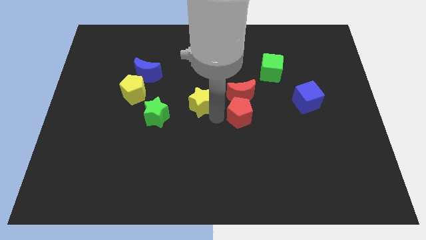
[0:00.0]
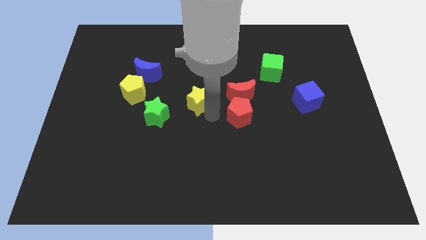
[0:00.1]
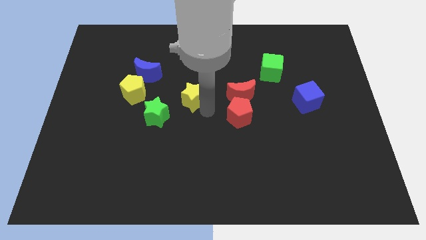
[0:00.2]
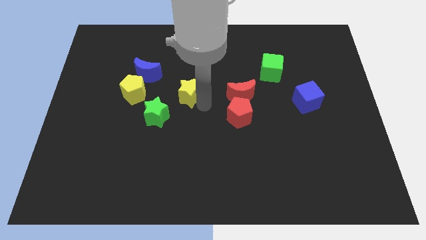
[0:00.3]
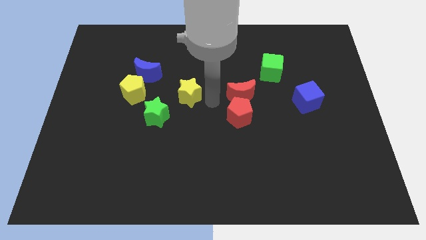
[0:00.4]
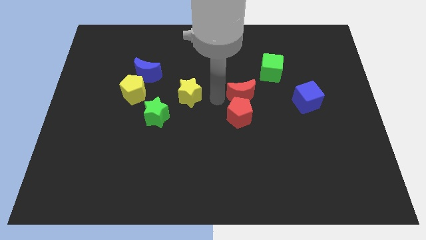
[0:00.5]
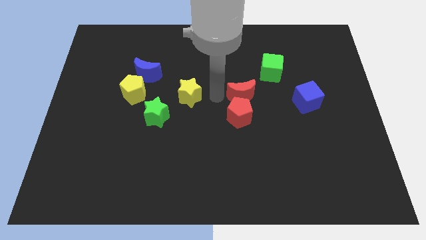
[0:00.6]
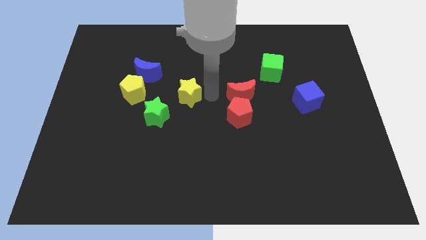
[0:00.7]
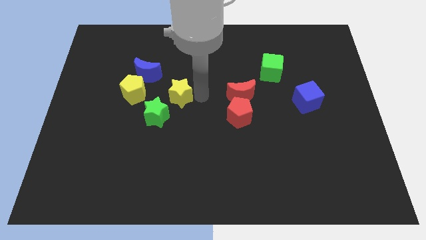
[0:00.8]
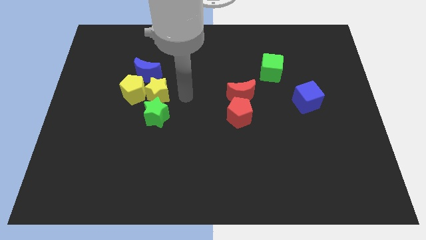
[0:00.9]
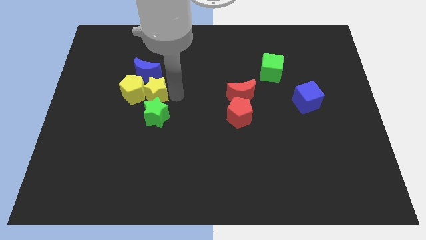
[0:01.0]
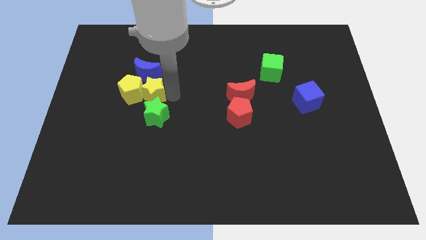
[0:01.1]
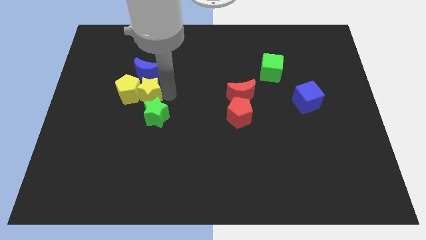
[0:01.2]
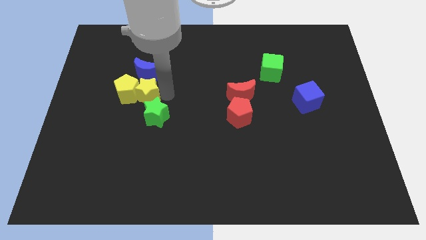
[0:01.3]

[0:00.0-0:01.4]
drag the yellow star into the right side of the yellow pentagon

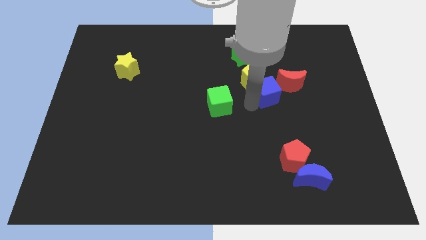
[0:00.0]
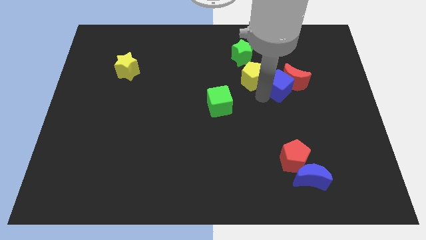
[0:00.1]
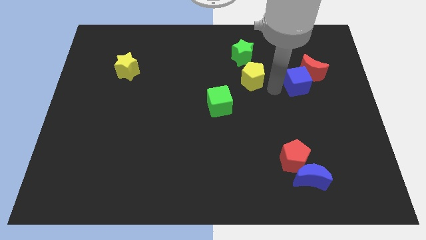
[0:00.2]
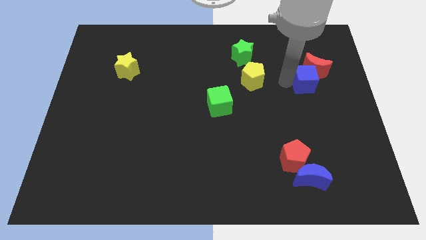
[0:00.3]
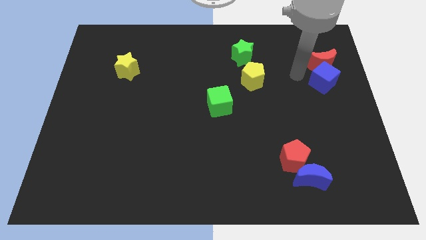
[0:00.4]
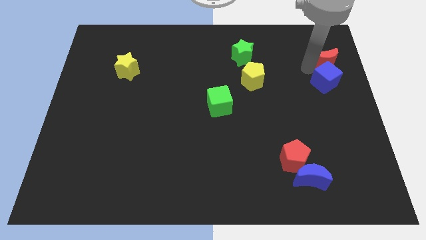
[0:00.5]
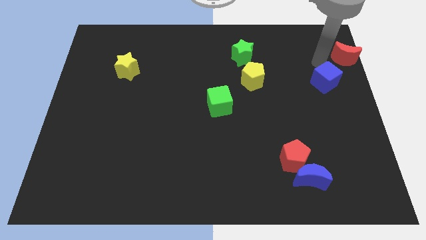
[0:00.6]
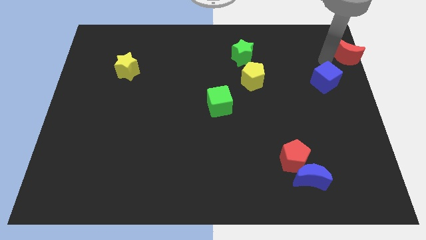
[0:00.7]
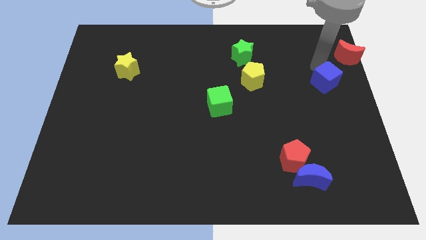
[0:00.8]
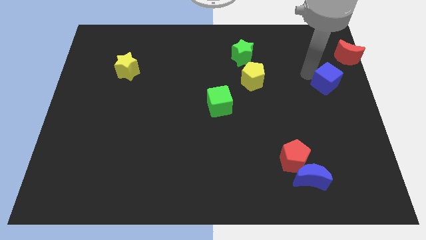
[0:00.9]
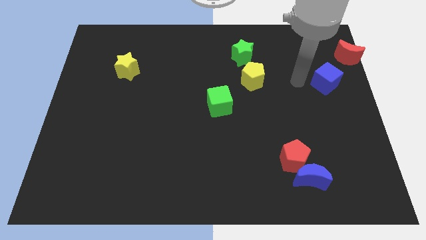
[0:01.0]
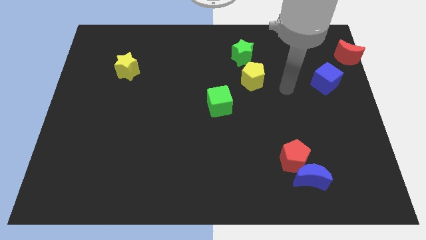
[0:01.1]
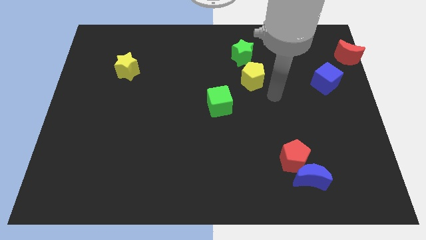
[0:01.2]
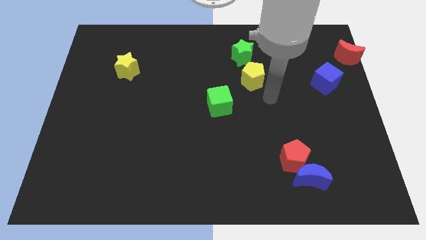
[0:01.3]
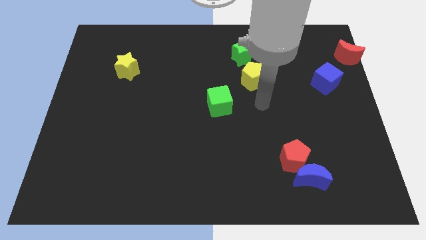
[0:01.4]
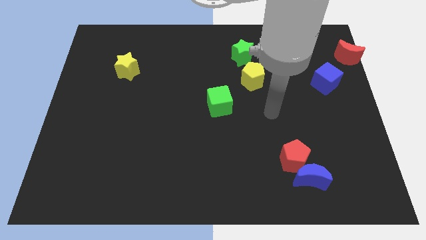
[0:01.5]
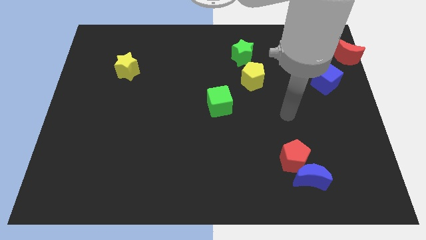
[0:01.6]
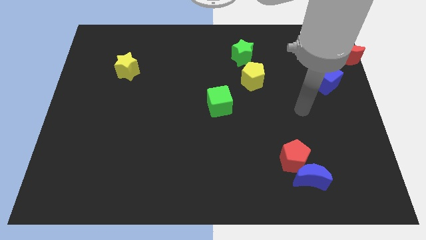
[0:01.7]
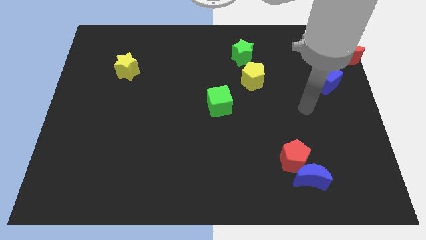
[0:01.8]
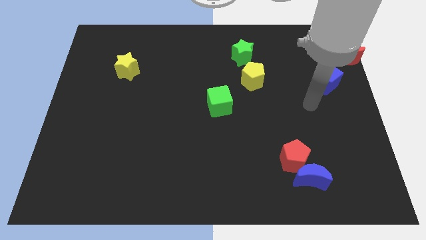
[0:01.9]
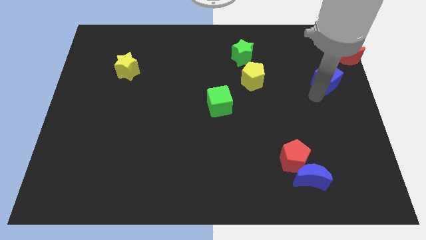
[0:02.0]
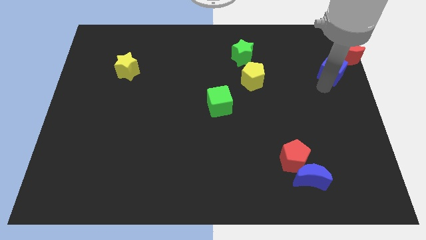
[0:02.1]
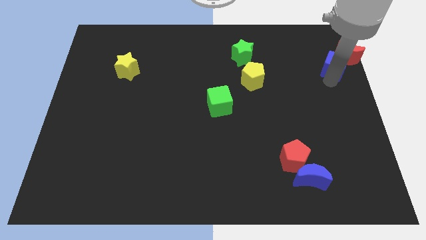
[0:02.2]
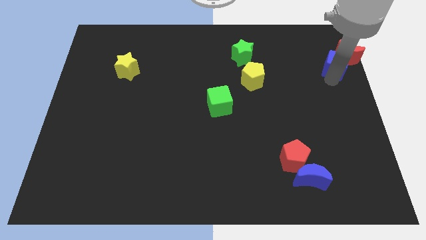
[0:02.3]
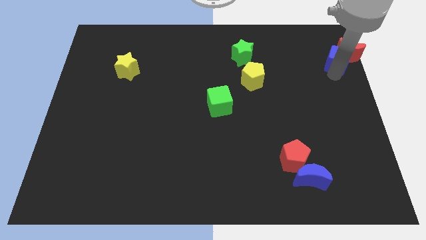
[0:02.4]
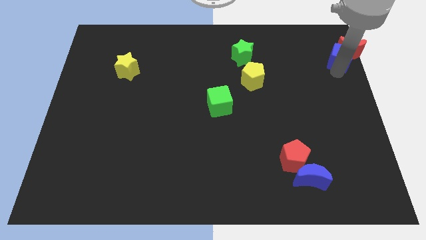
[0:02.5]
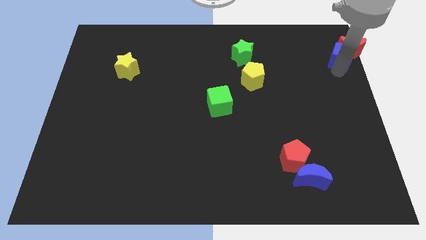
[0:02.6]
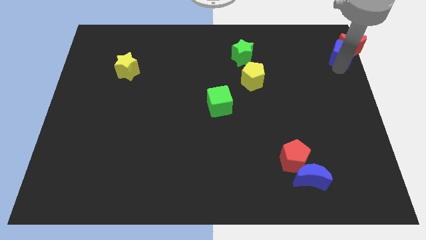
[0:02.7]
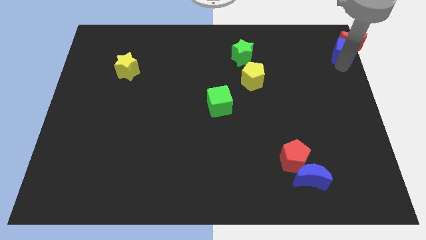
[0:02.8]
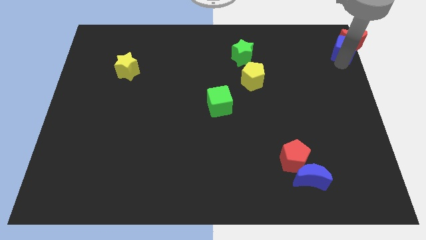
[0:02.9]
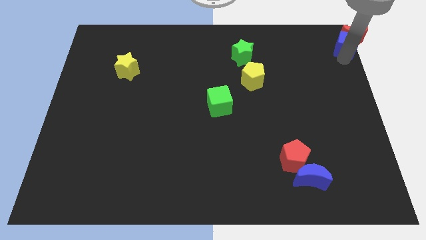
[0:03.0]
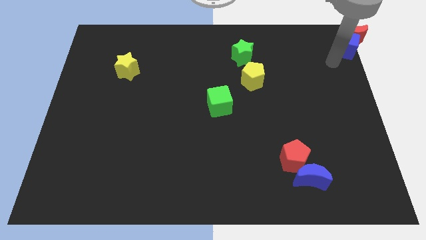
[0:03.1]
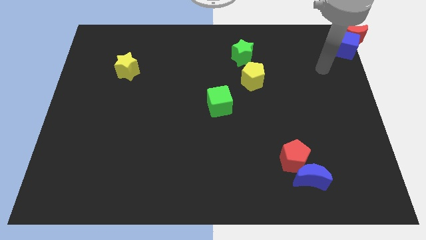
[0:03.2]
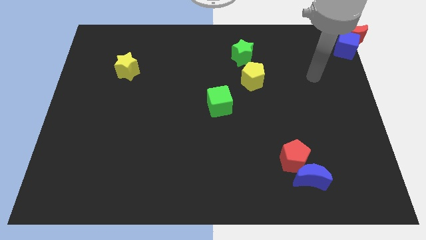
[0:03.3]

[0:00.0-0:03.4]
move blue cube and red moon towards the top right of the board

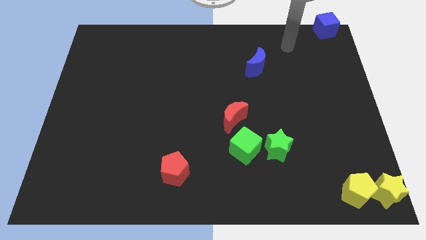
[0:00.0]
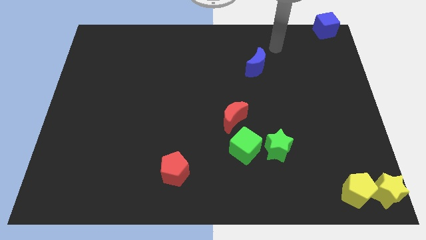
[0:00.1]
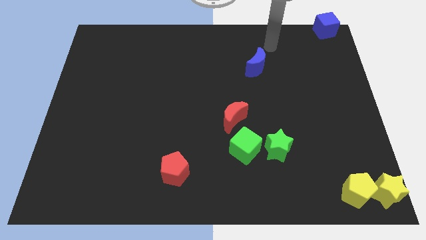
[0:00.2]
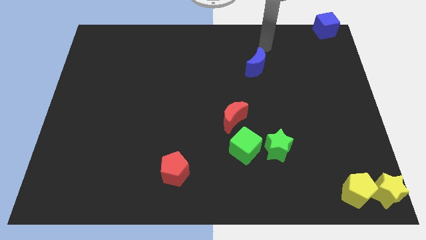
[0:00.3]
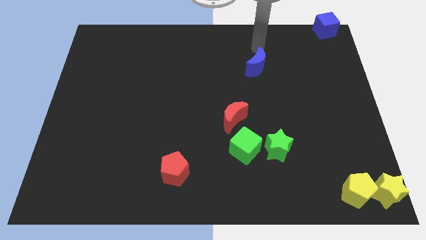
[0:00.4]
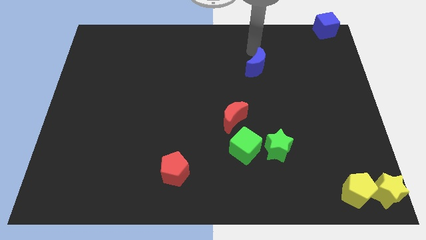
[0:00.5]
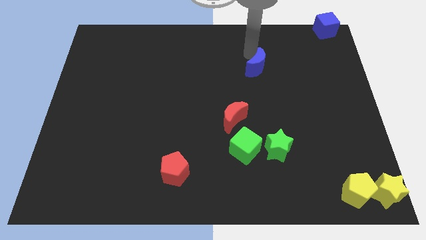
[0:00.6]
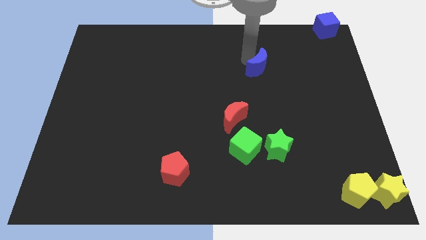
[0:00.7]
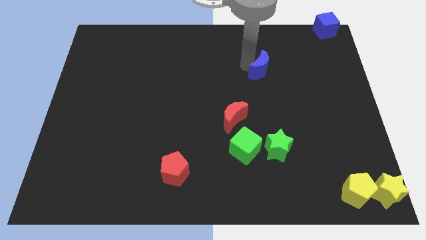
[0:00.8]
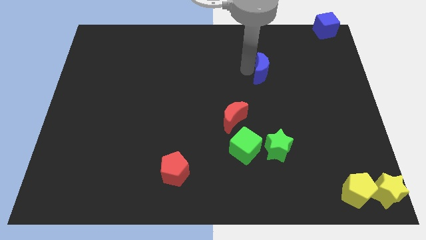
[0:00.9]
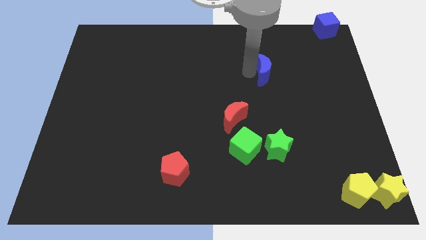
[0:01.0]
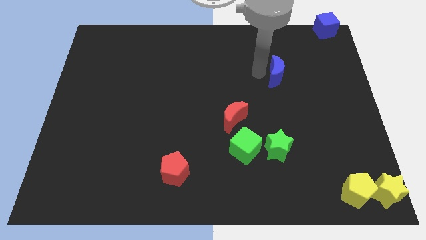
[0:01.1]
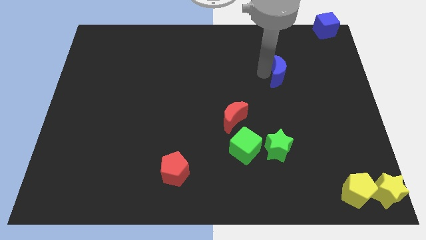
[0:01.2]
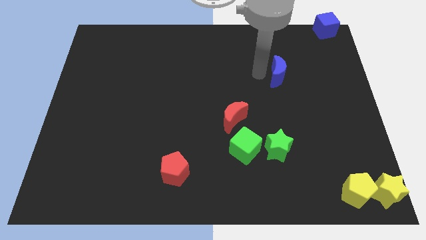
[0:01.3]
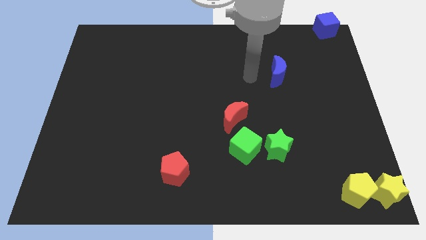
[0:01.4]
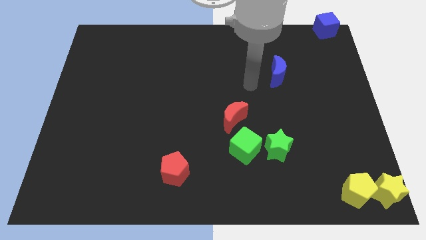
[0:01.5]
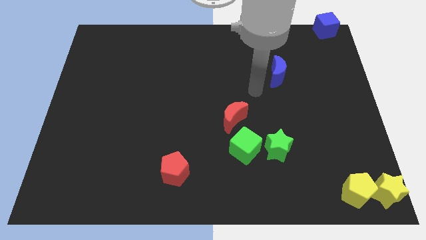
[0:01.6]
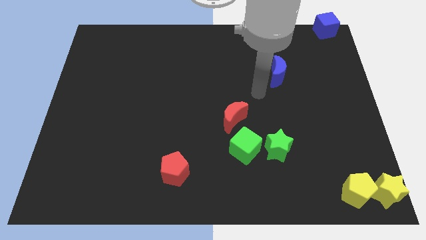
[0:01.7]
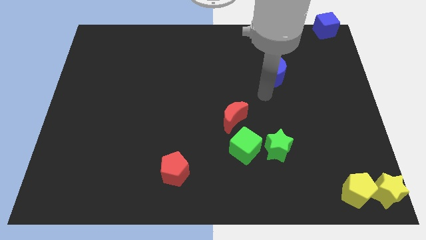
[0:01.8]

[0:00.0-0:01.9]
slightly push the blue crescent towards the blue cube

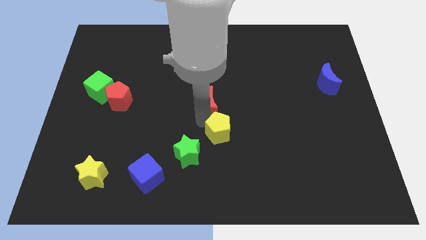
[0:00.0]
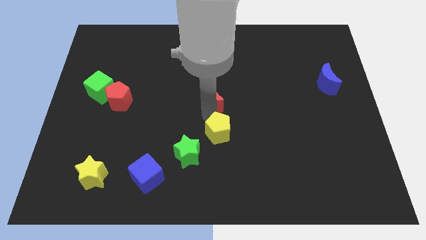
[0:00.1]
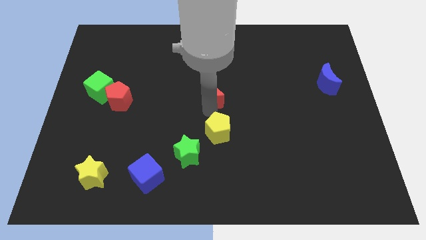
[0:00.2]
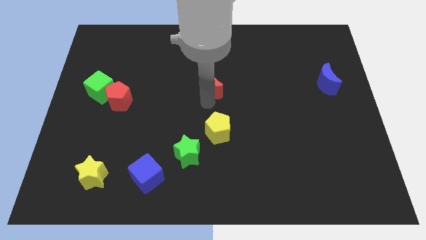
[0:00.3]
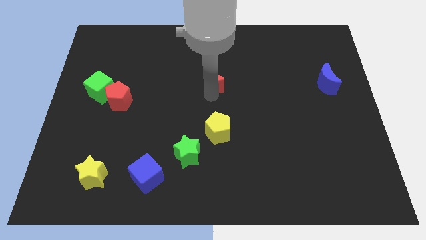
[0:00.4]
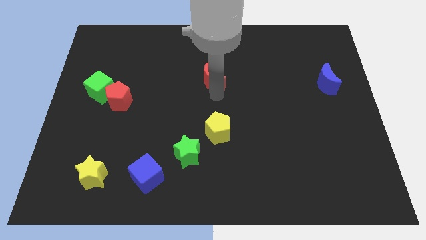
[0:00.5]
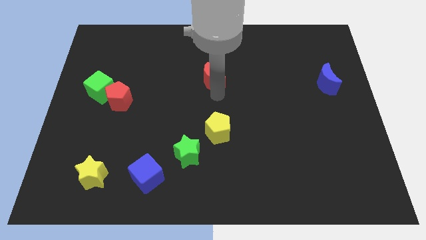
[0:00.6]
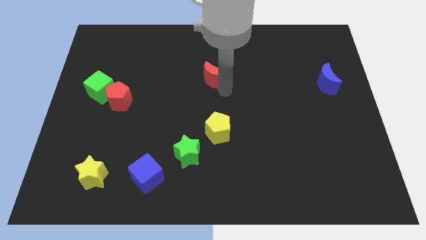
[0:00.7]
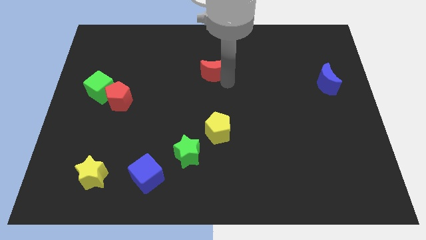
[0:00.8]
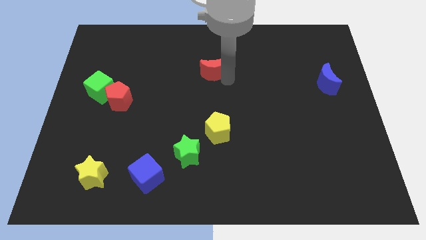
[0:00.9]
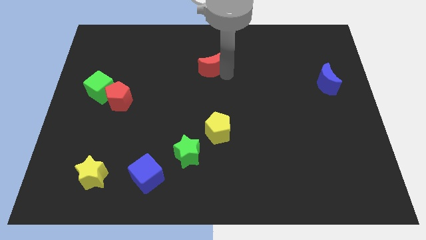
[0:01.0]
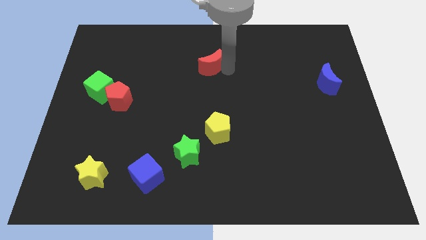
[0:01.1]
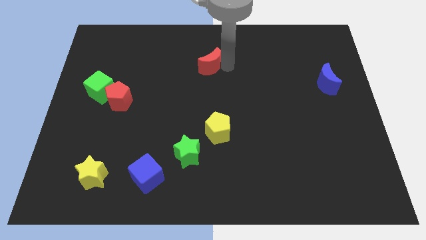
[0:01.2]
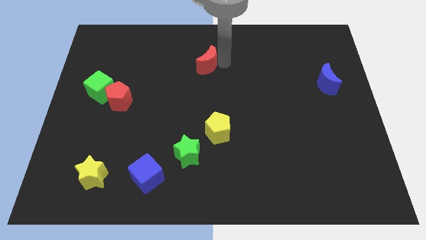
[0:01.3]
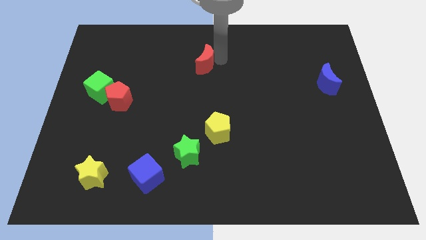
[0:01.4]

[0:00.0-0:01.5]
separate the red block from the yellow pentagon

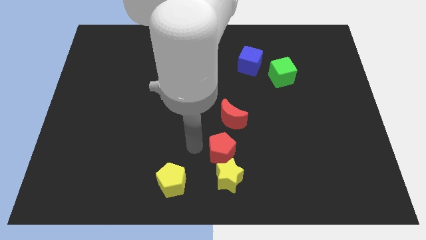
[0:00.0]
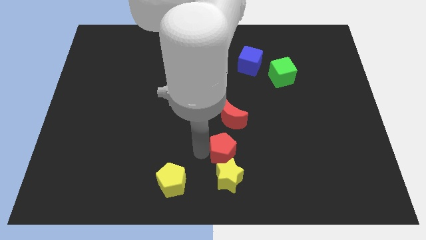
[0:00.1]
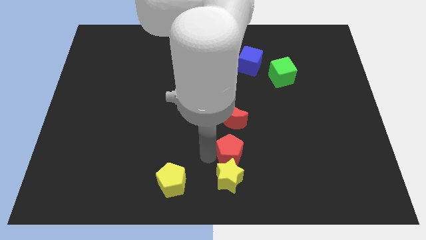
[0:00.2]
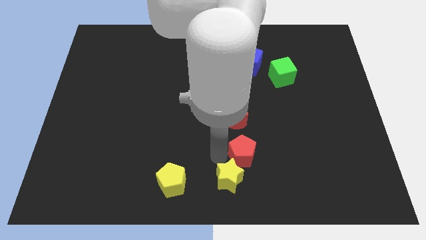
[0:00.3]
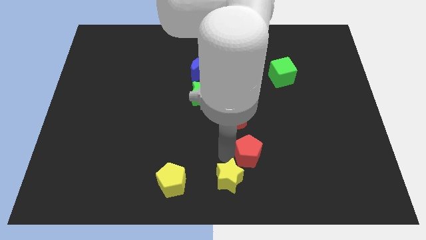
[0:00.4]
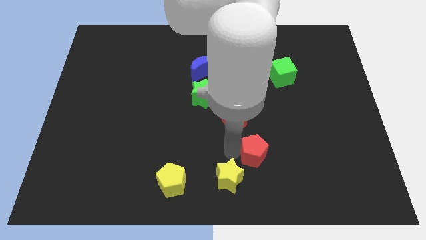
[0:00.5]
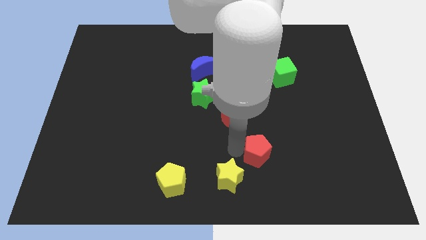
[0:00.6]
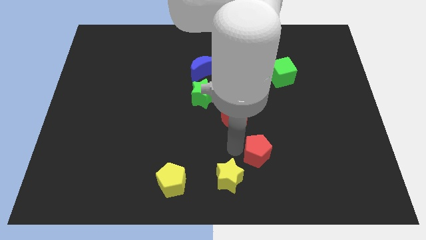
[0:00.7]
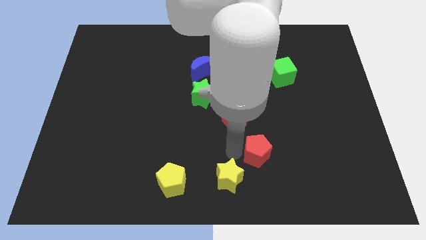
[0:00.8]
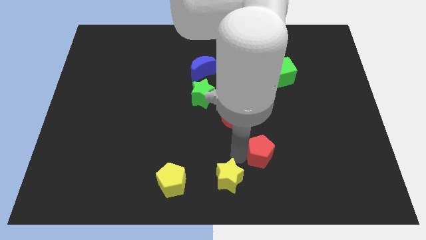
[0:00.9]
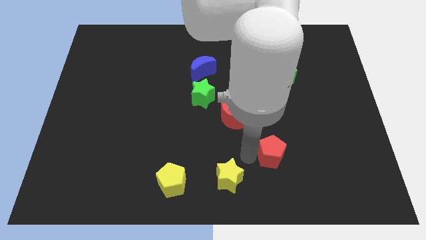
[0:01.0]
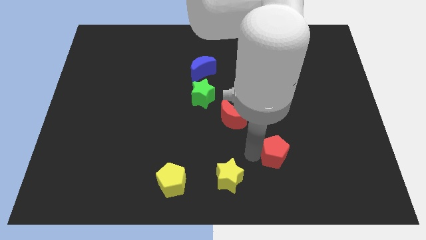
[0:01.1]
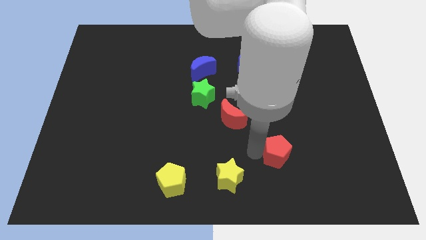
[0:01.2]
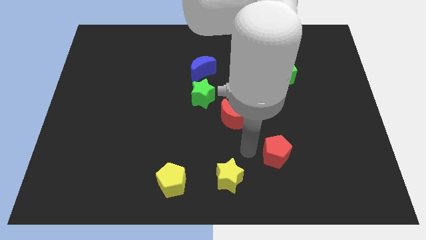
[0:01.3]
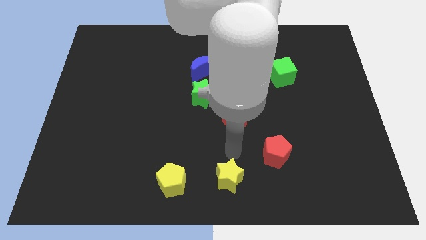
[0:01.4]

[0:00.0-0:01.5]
move red pentagon diagonally bottom right to the red crescent
